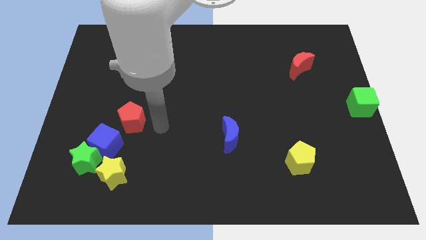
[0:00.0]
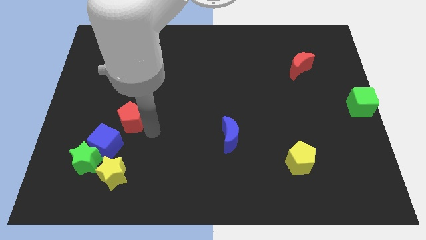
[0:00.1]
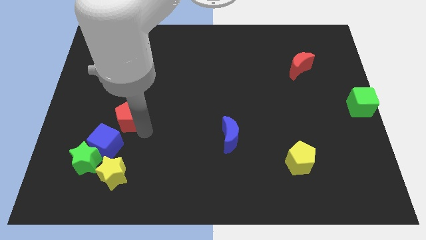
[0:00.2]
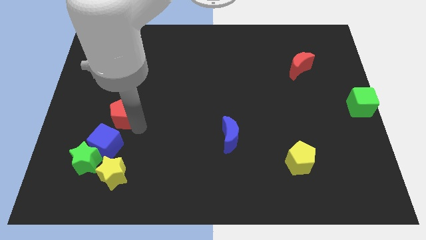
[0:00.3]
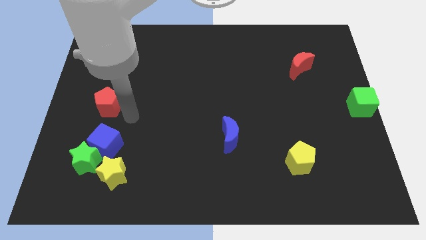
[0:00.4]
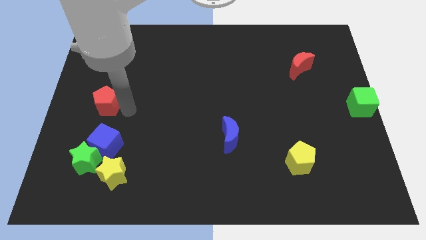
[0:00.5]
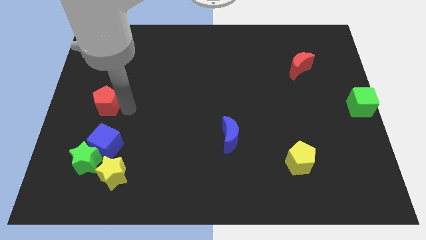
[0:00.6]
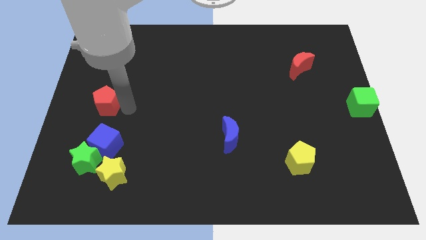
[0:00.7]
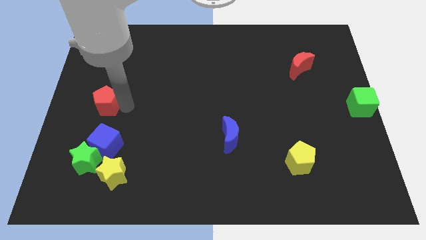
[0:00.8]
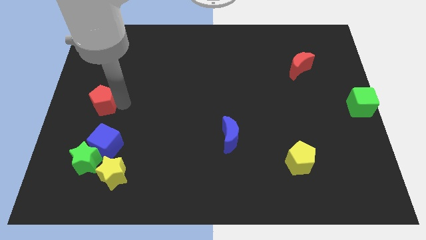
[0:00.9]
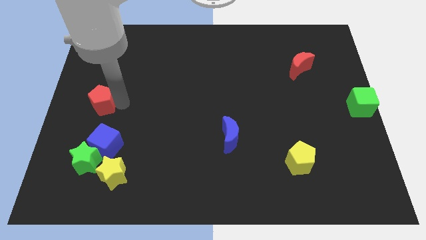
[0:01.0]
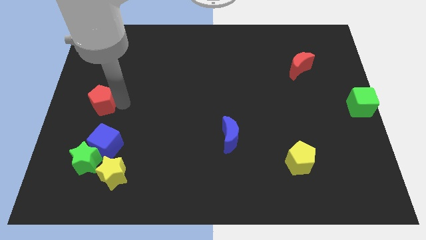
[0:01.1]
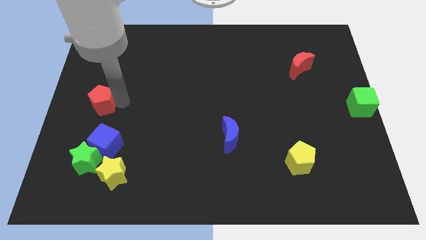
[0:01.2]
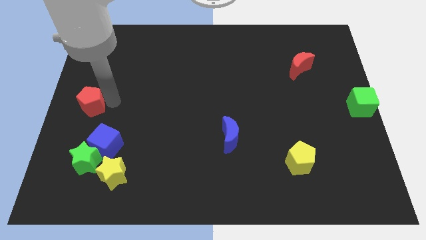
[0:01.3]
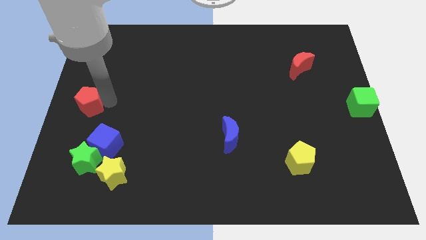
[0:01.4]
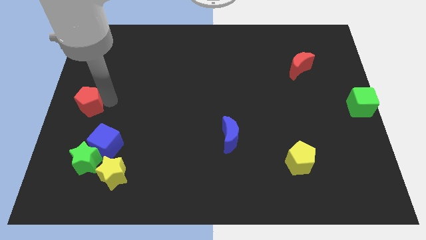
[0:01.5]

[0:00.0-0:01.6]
push the red pentagon to the left of the board

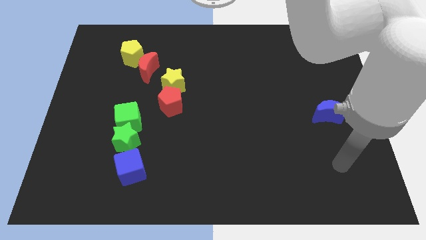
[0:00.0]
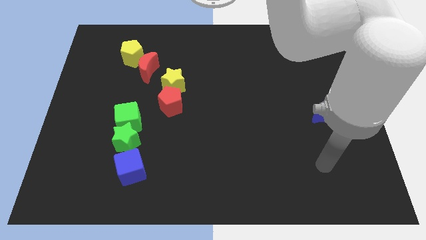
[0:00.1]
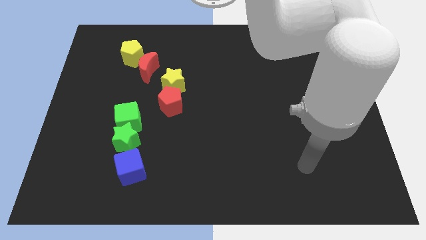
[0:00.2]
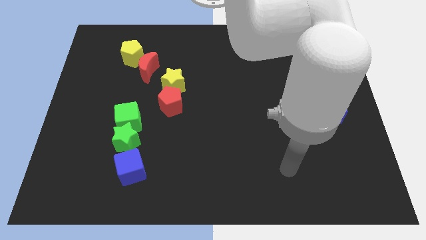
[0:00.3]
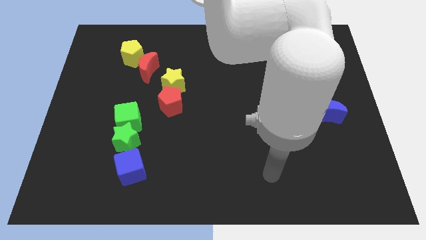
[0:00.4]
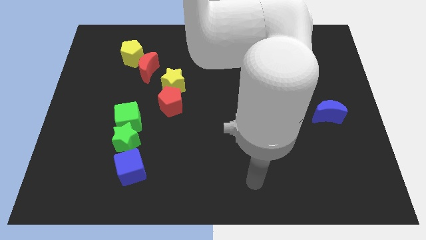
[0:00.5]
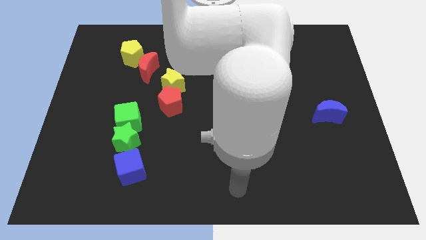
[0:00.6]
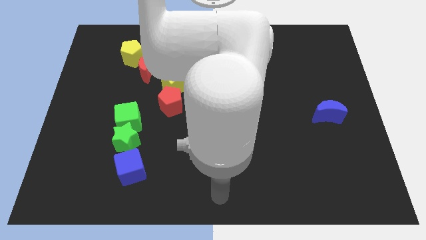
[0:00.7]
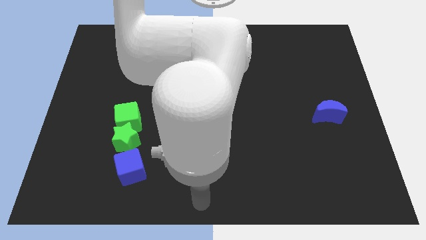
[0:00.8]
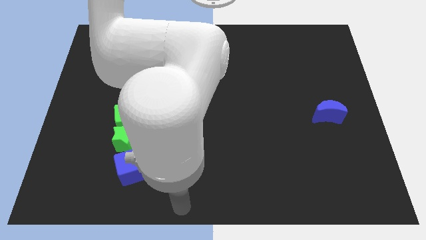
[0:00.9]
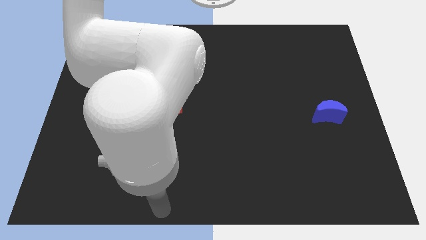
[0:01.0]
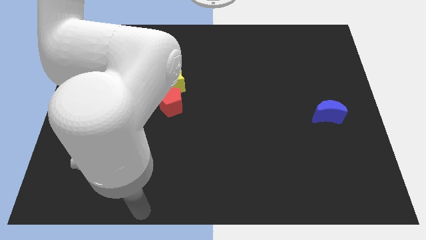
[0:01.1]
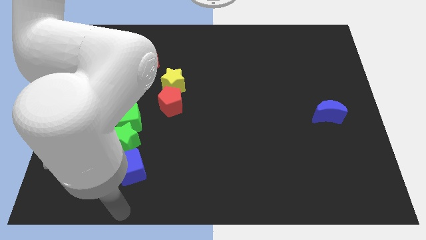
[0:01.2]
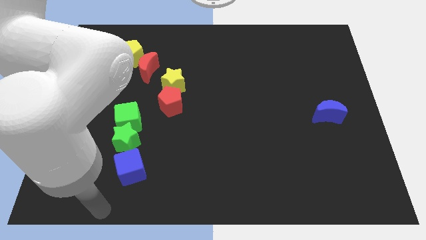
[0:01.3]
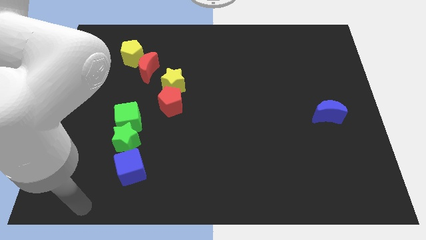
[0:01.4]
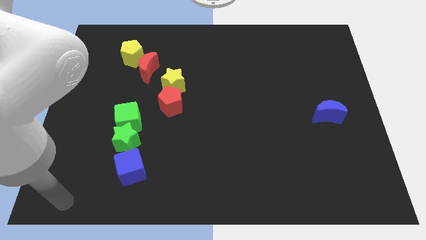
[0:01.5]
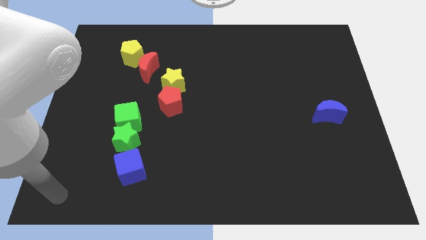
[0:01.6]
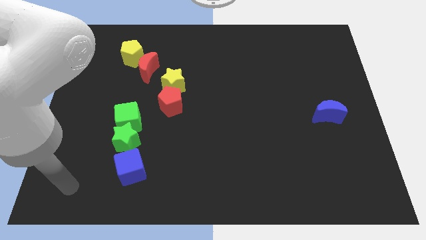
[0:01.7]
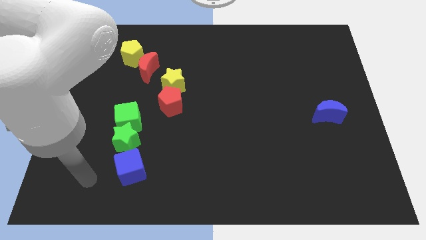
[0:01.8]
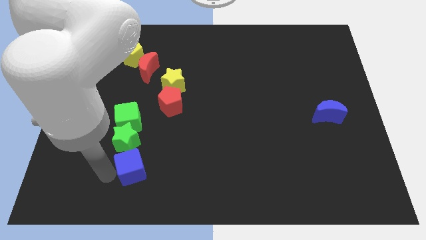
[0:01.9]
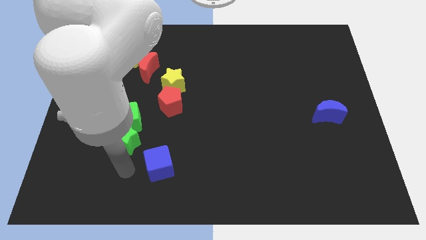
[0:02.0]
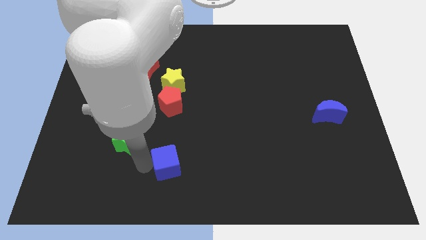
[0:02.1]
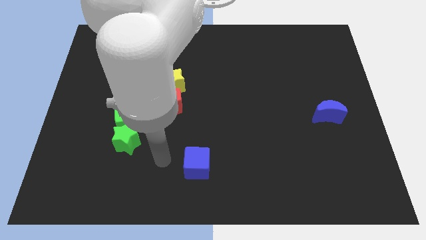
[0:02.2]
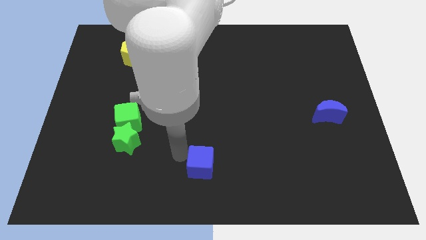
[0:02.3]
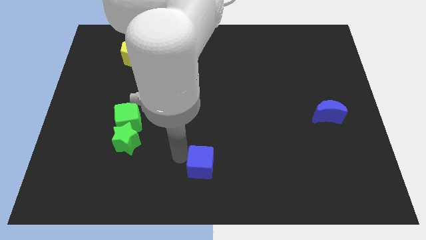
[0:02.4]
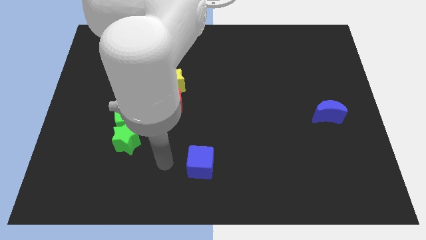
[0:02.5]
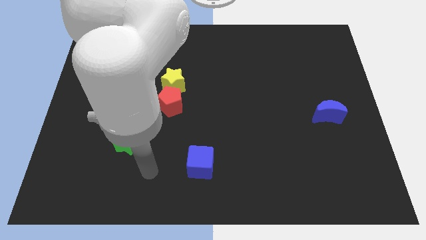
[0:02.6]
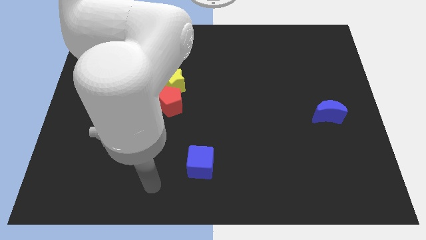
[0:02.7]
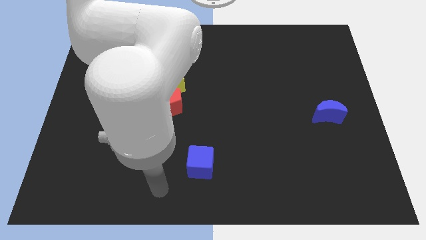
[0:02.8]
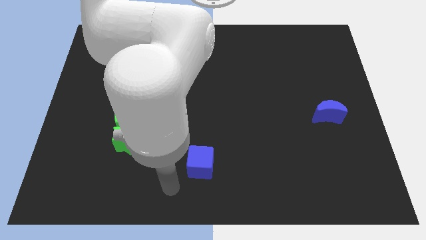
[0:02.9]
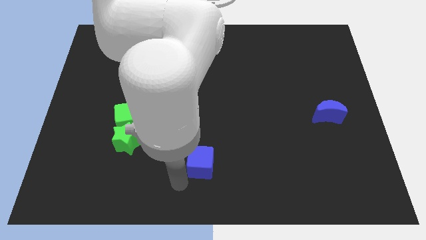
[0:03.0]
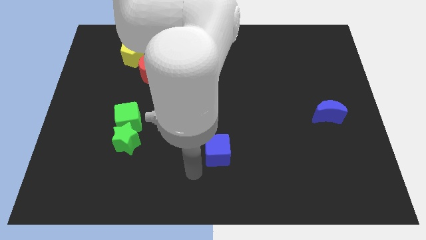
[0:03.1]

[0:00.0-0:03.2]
push the blue cube towards the right

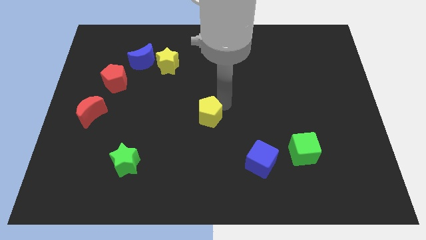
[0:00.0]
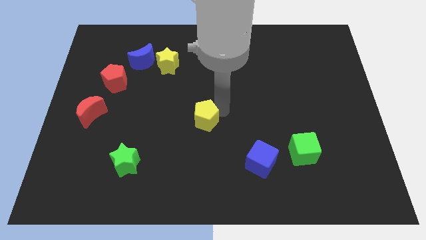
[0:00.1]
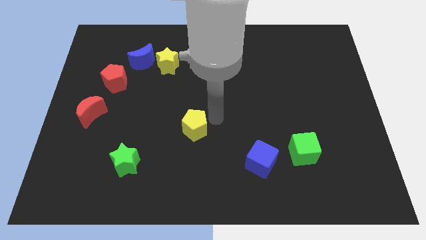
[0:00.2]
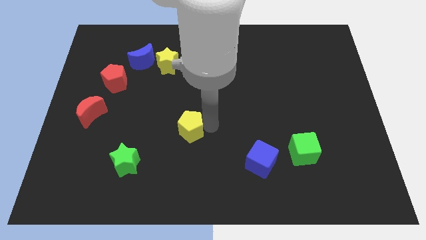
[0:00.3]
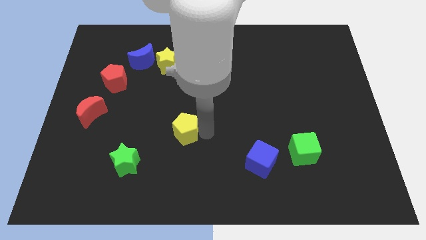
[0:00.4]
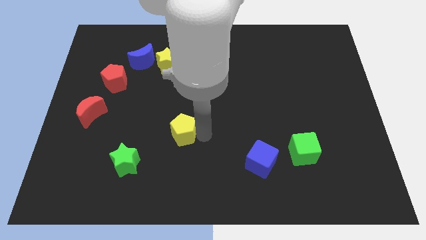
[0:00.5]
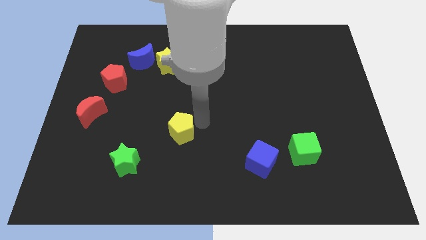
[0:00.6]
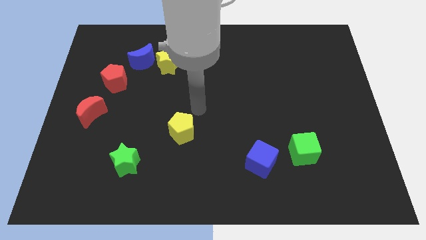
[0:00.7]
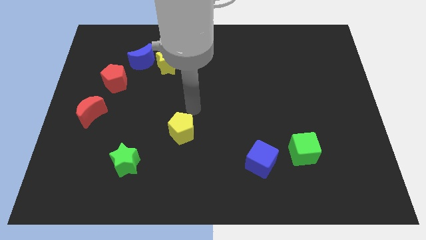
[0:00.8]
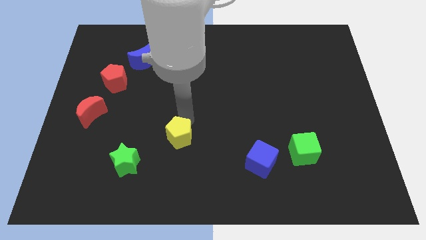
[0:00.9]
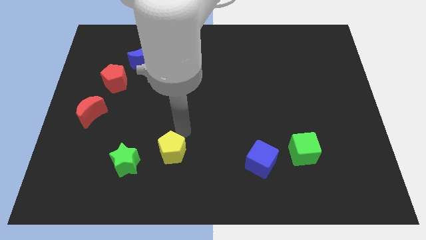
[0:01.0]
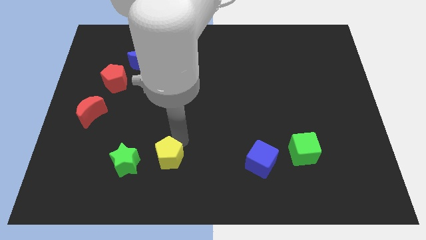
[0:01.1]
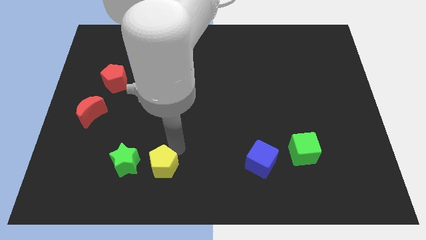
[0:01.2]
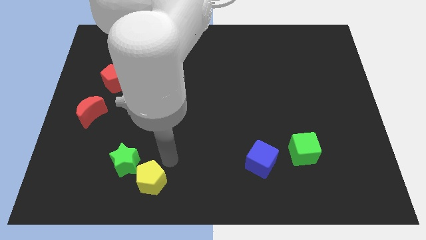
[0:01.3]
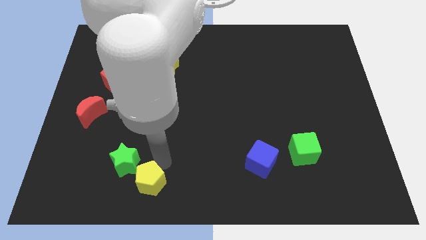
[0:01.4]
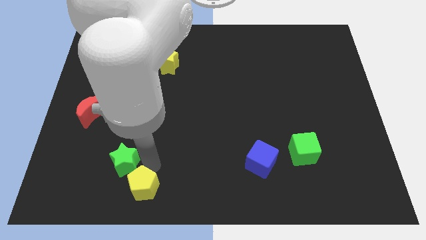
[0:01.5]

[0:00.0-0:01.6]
move the yellow pentagon towards the green star

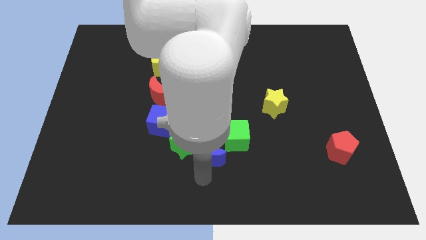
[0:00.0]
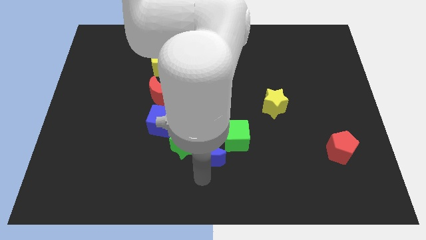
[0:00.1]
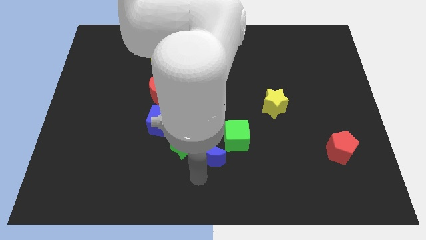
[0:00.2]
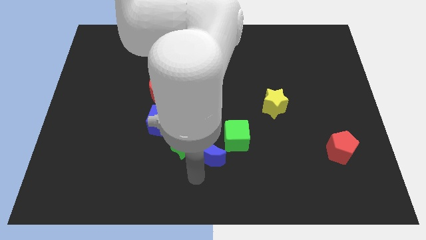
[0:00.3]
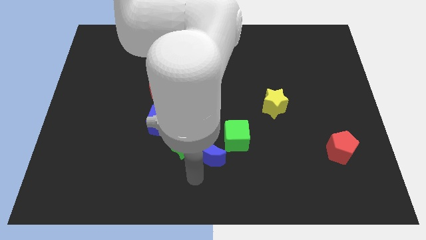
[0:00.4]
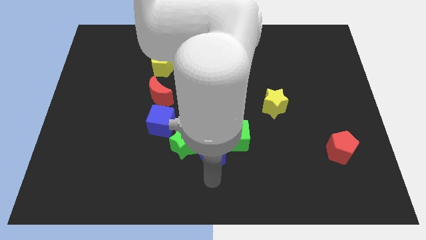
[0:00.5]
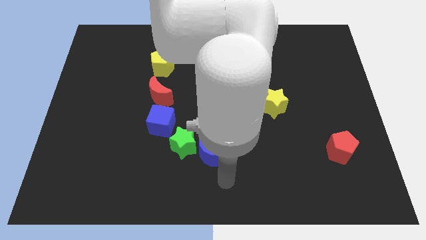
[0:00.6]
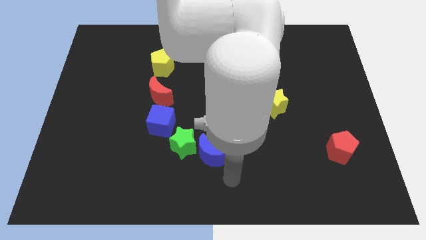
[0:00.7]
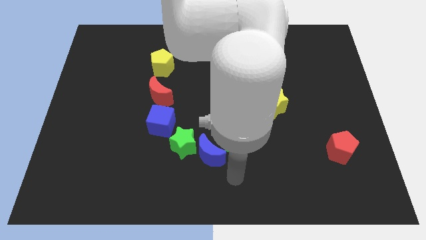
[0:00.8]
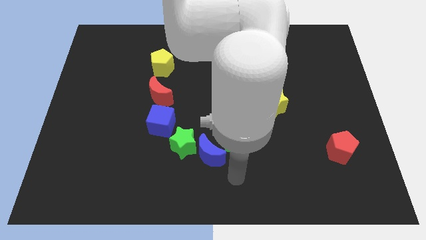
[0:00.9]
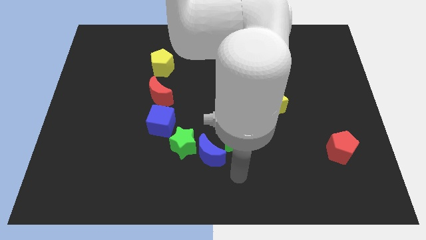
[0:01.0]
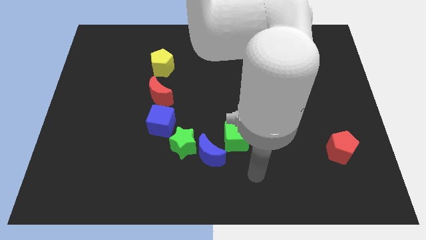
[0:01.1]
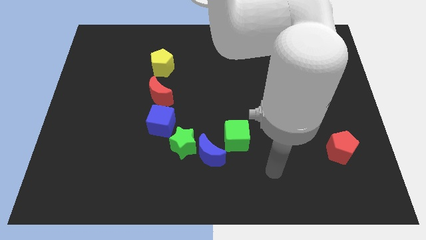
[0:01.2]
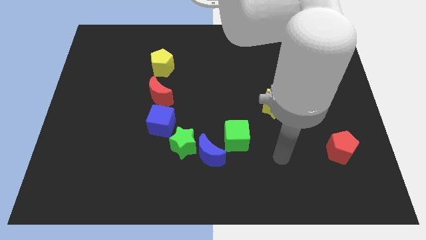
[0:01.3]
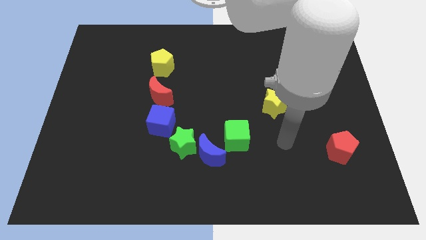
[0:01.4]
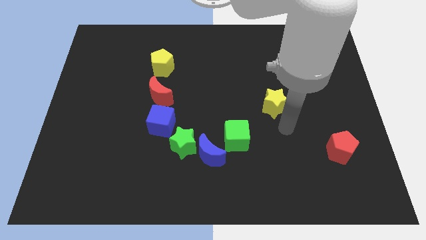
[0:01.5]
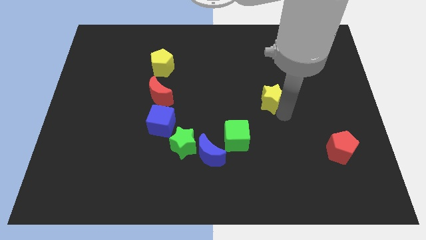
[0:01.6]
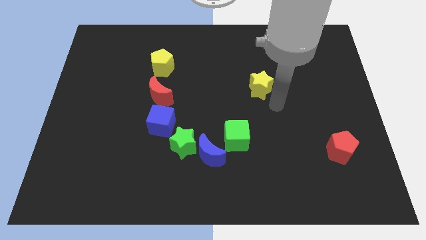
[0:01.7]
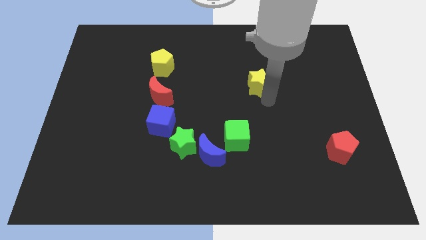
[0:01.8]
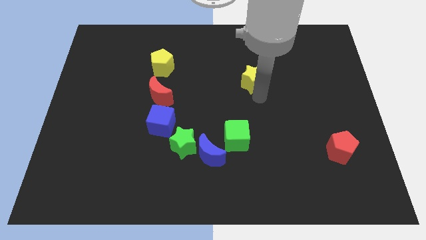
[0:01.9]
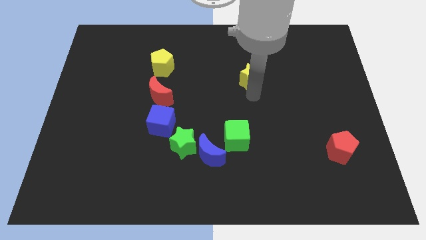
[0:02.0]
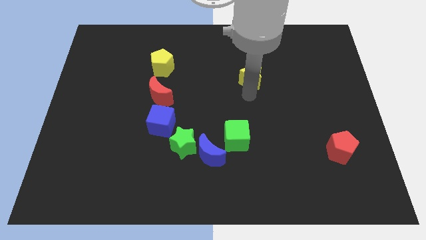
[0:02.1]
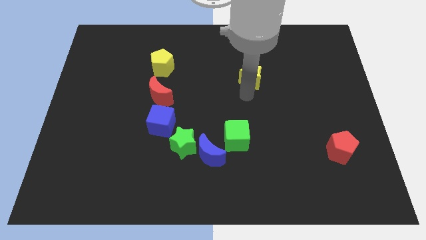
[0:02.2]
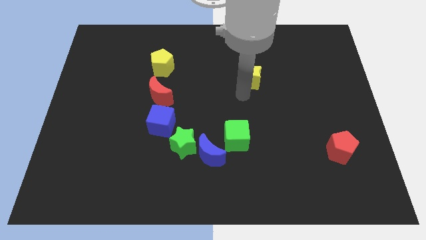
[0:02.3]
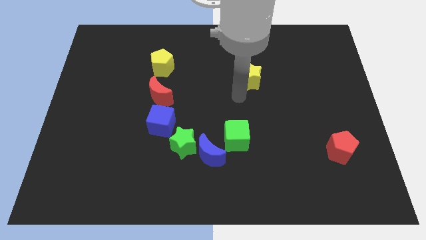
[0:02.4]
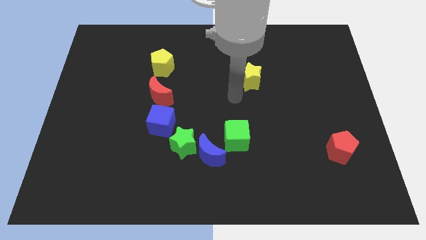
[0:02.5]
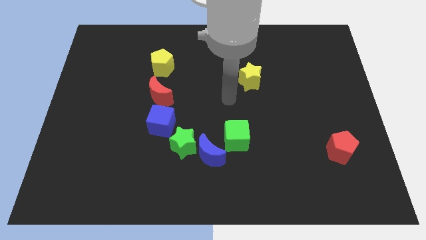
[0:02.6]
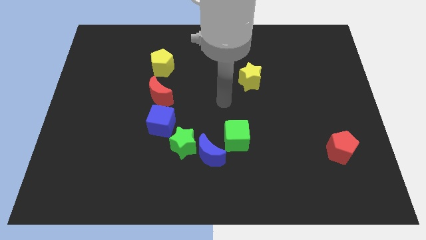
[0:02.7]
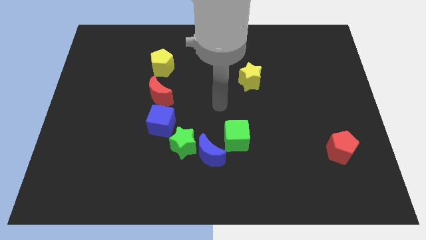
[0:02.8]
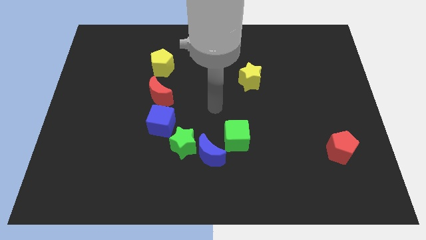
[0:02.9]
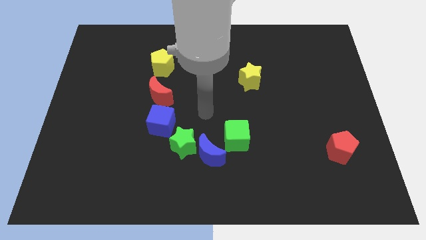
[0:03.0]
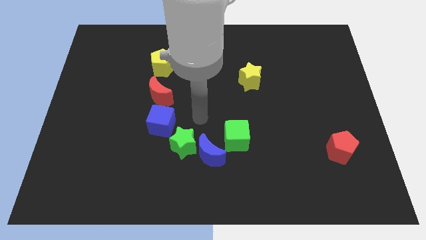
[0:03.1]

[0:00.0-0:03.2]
move the yellow star above the green cube
